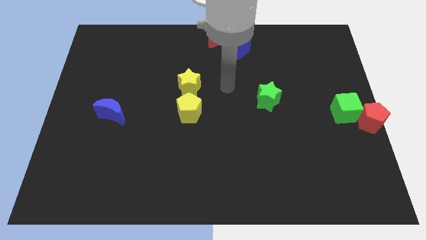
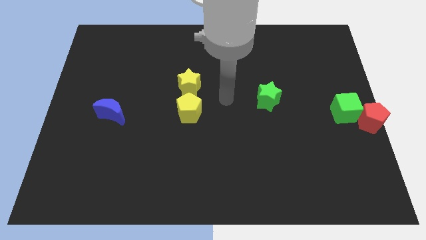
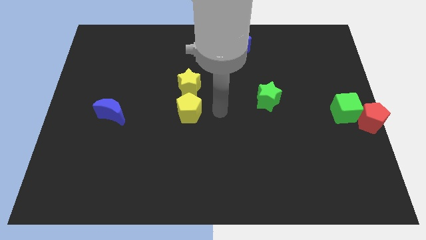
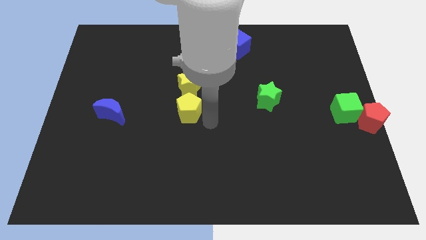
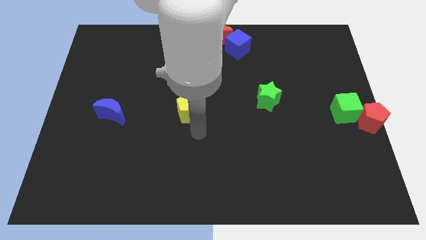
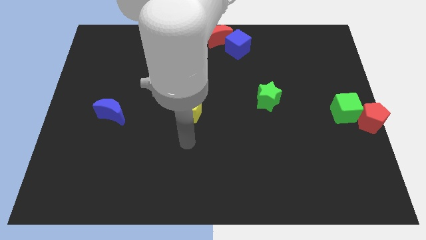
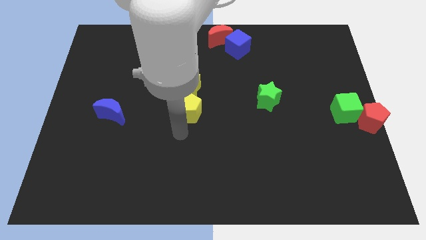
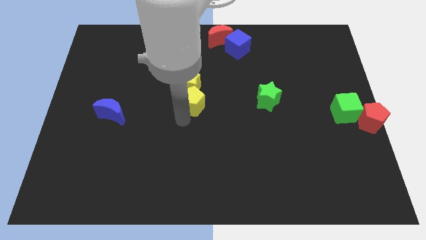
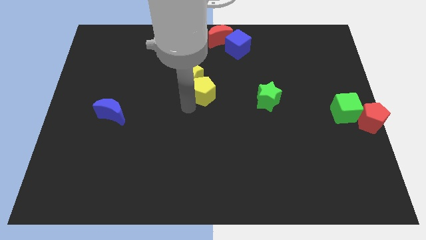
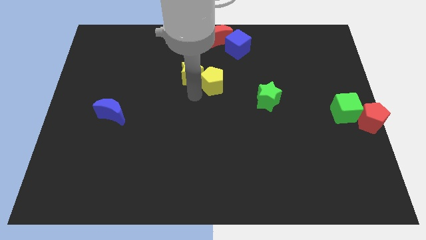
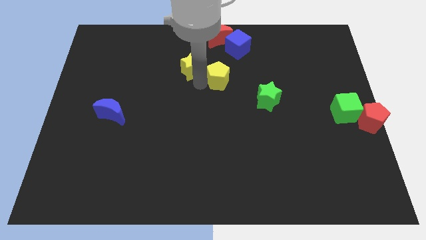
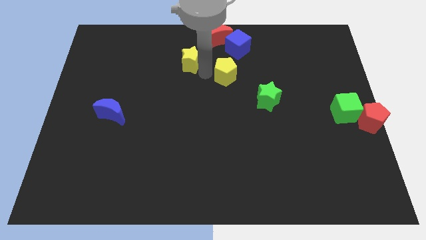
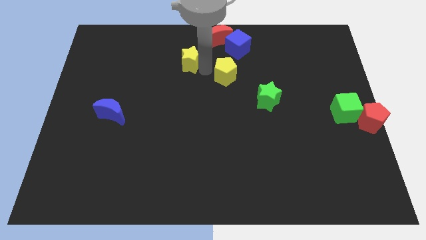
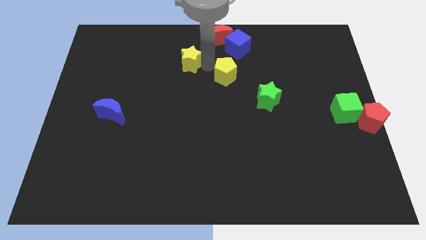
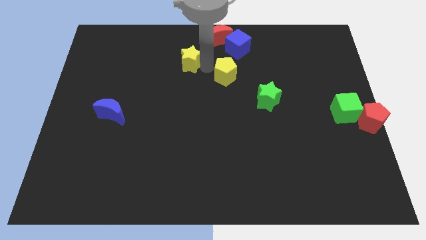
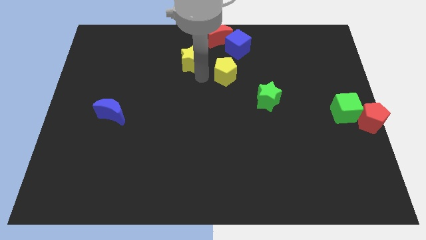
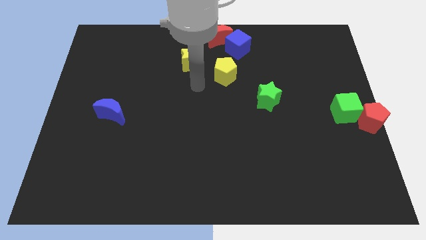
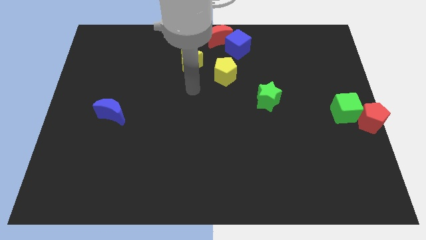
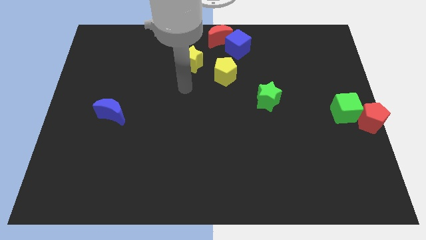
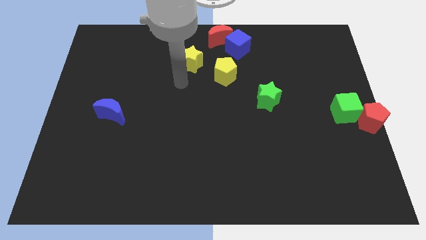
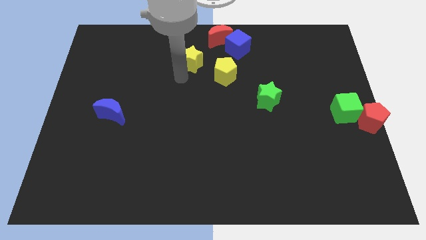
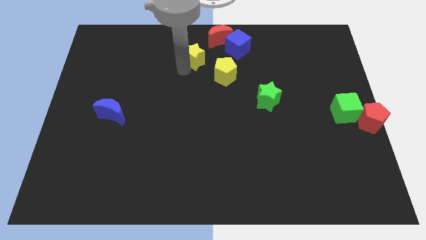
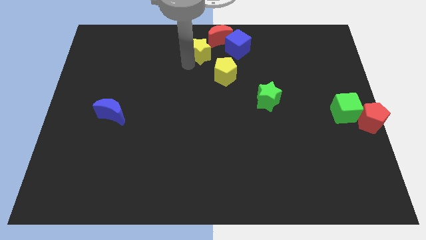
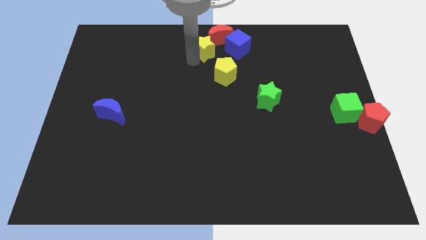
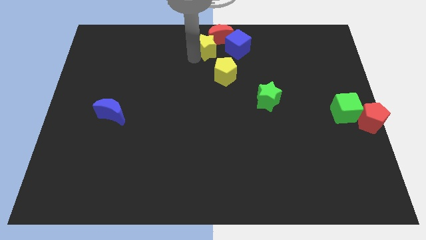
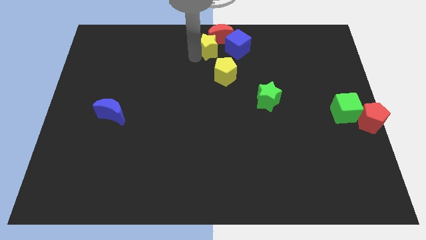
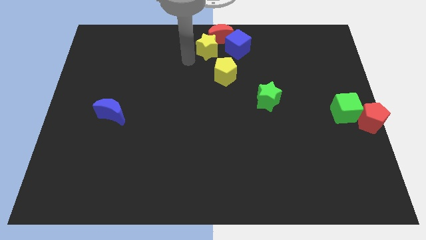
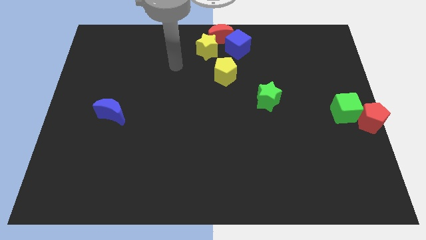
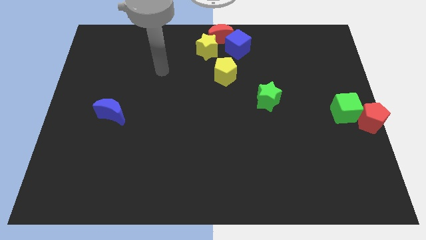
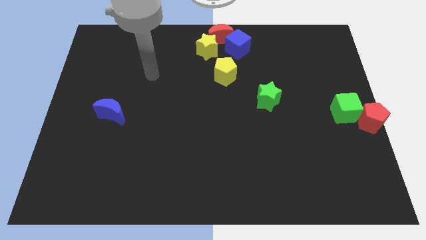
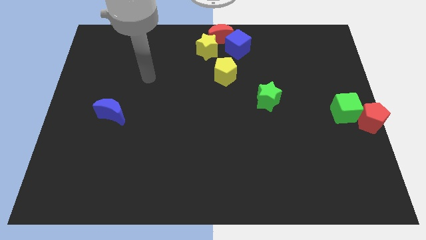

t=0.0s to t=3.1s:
push the yellow blocks towards the red crescent

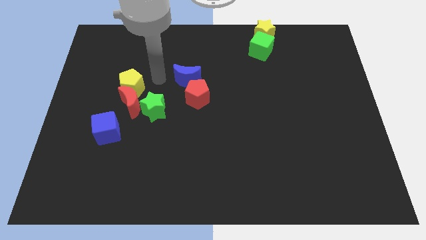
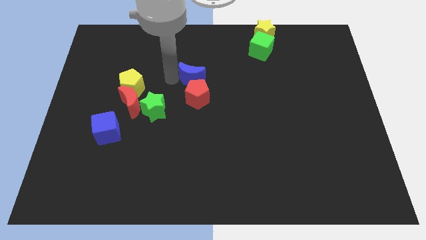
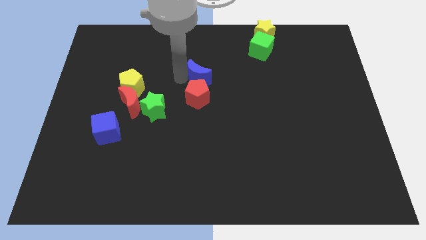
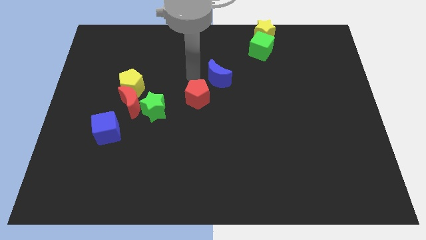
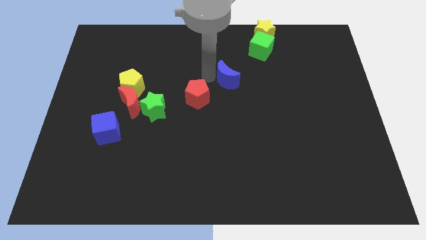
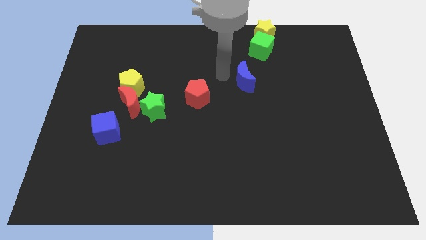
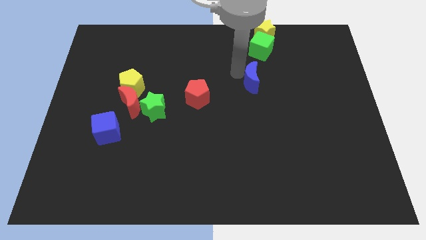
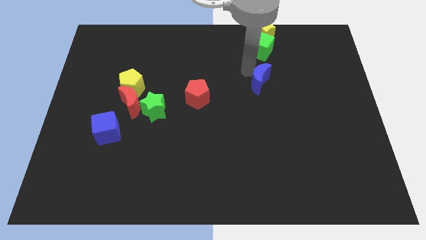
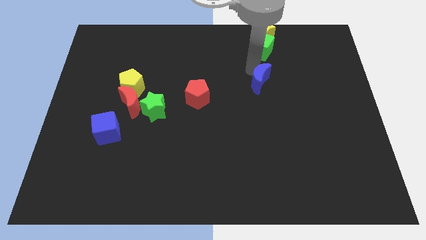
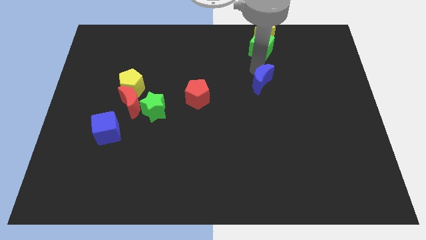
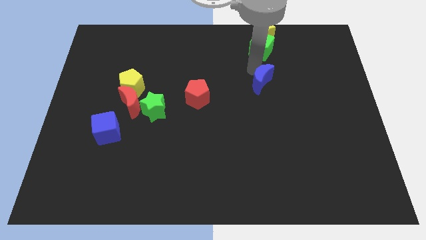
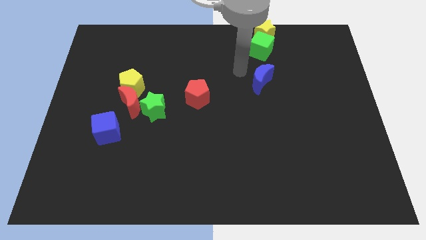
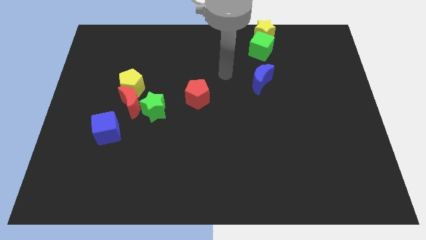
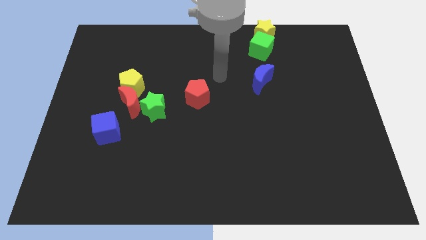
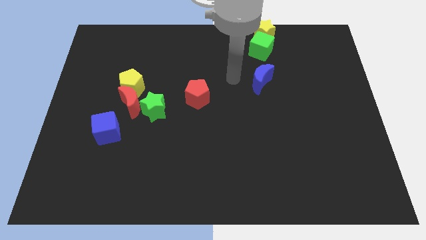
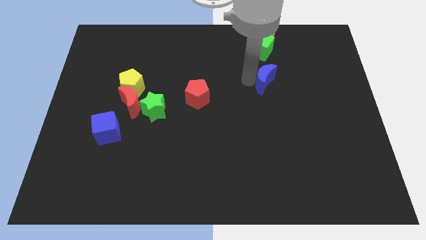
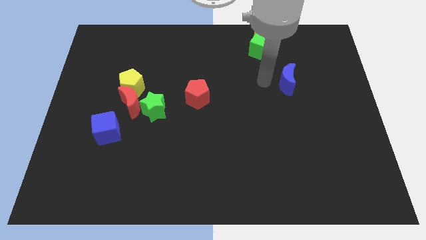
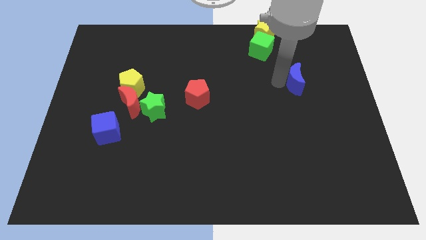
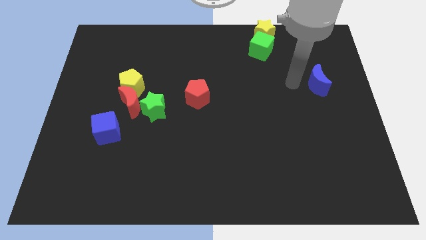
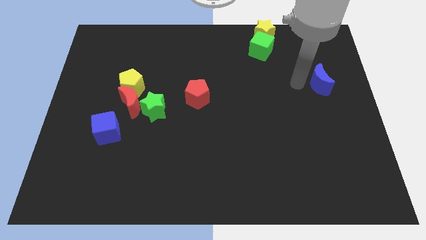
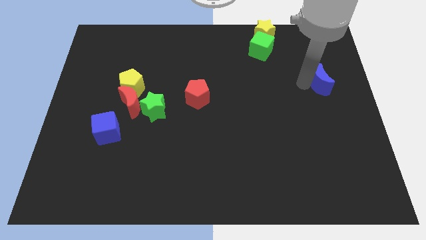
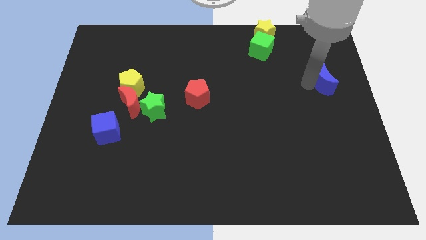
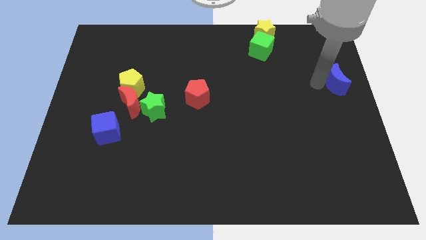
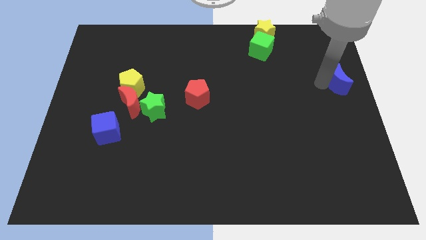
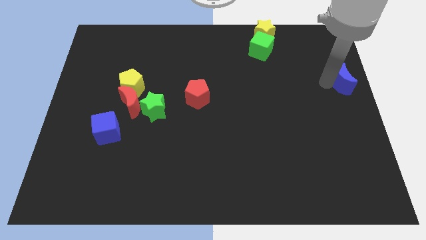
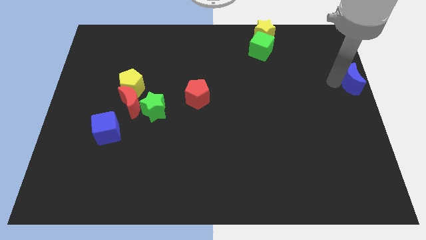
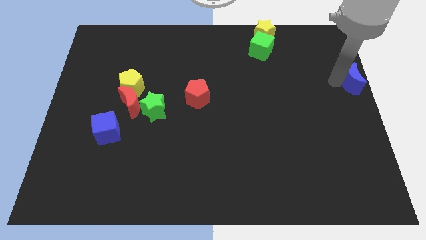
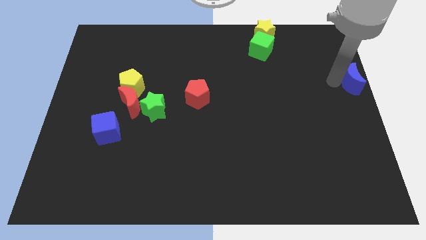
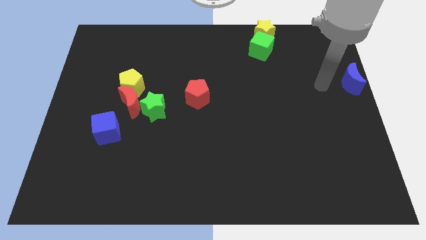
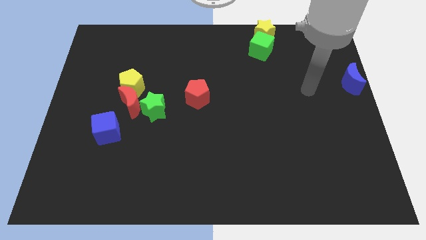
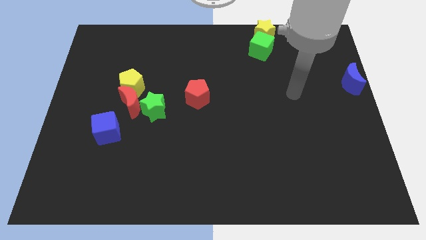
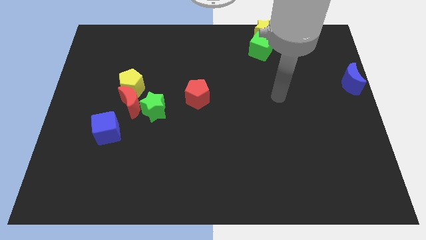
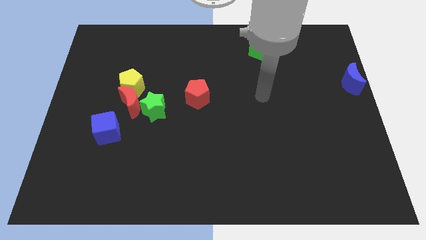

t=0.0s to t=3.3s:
slide the blue moon diagonally bottom right to the green cube

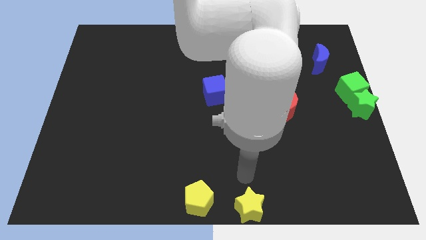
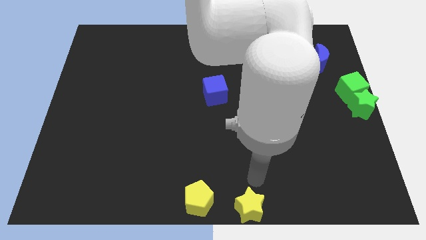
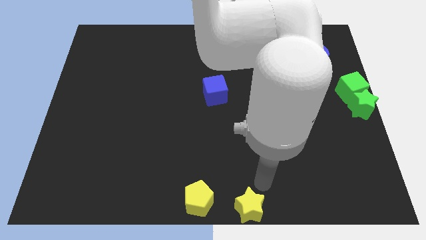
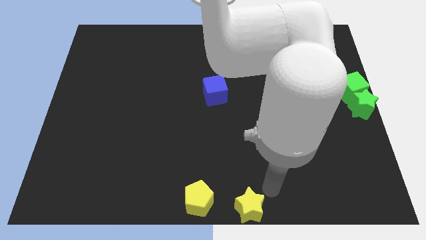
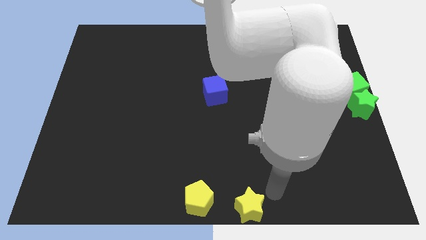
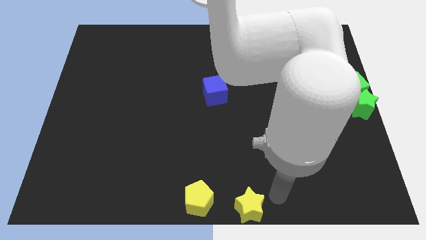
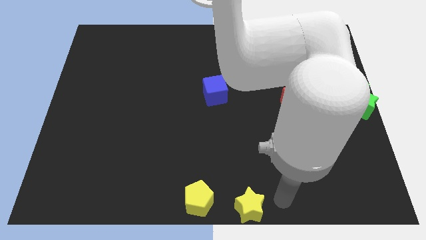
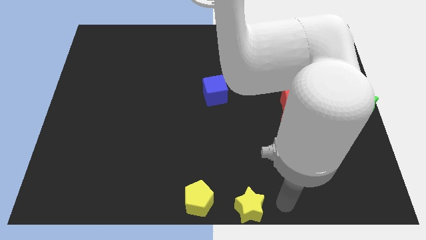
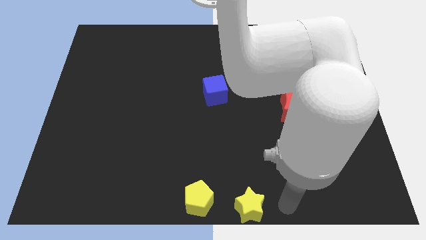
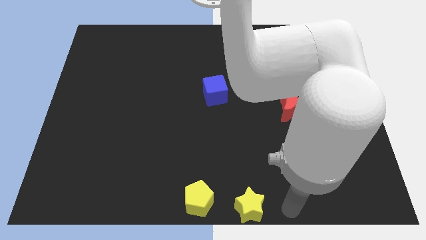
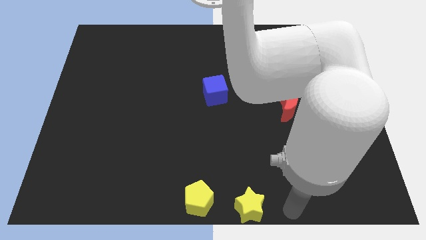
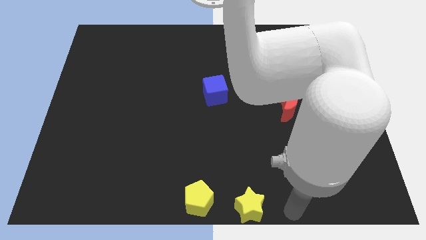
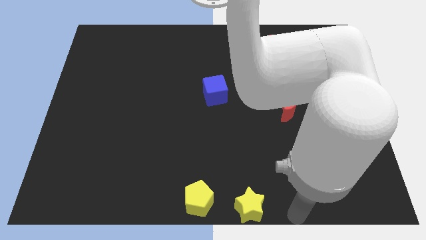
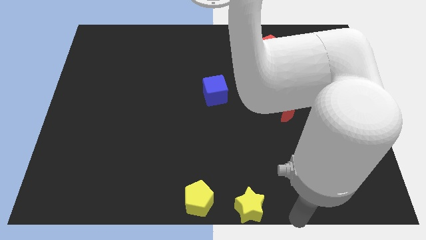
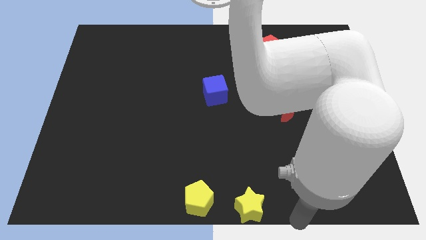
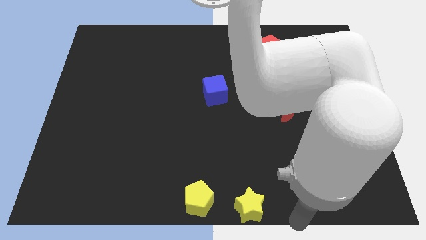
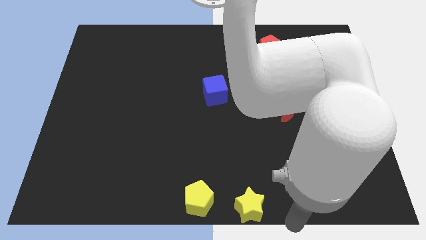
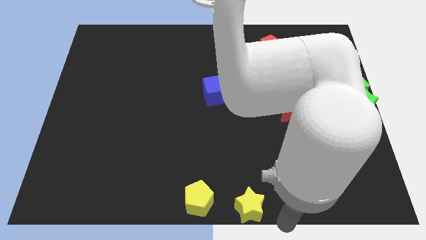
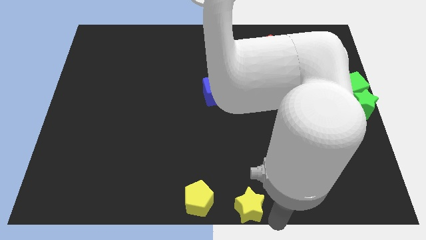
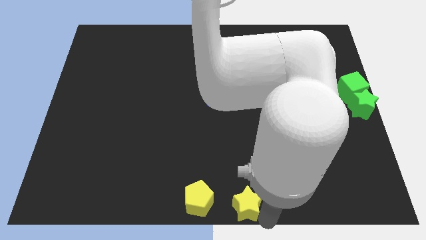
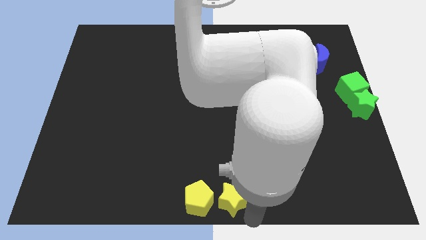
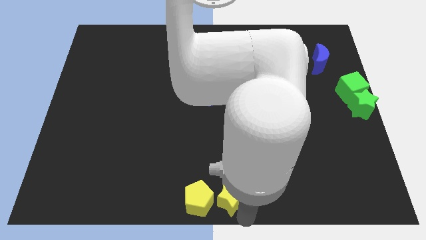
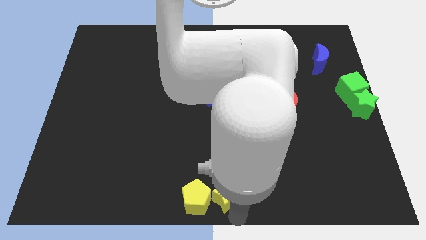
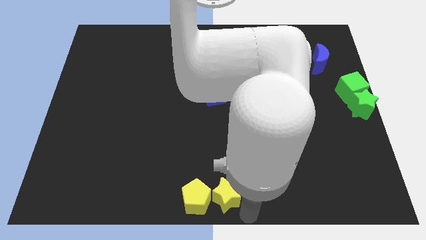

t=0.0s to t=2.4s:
push the yellow star to the right side of the yellow pentagon
